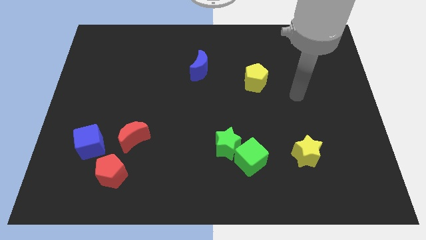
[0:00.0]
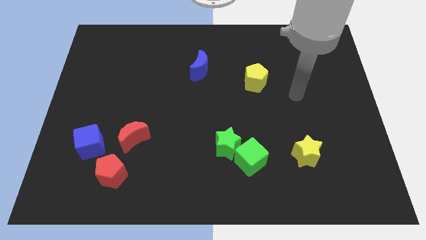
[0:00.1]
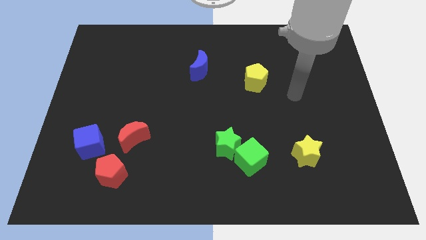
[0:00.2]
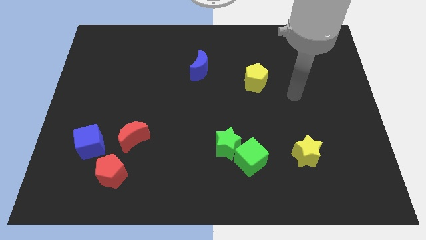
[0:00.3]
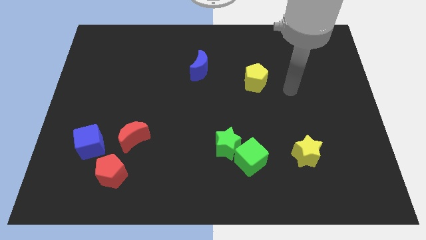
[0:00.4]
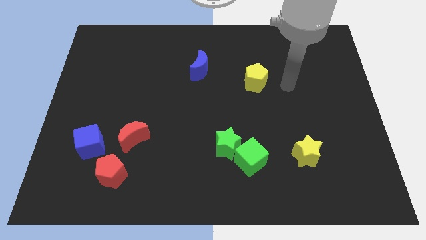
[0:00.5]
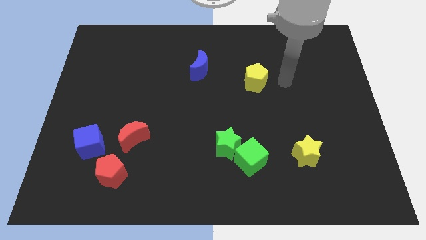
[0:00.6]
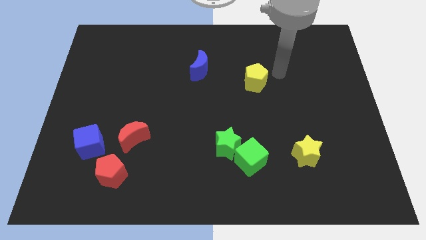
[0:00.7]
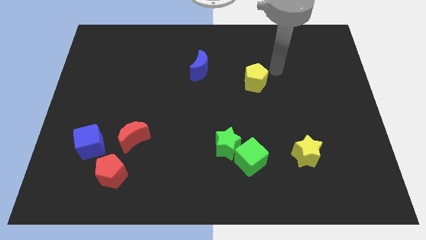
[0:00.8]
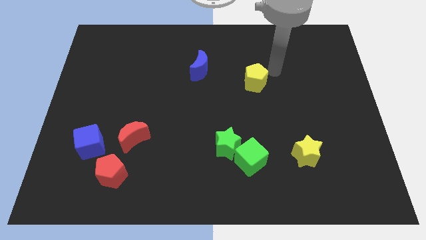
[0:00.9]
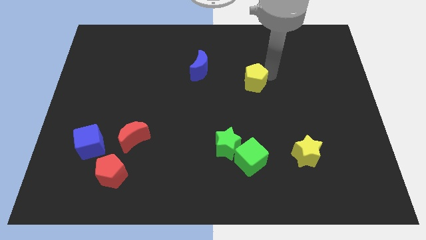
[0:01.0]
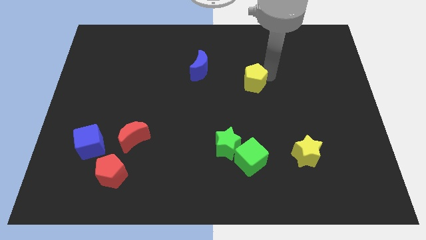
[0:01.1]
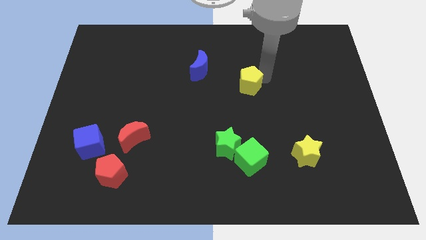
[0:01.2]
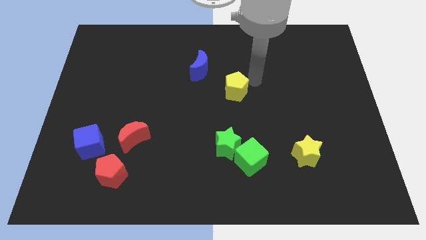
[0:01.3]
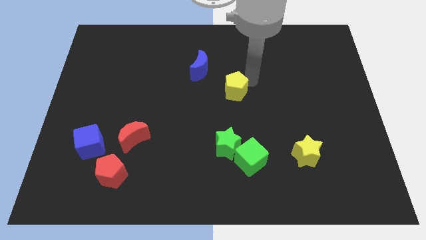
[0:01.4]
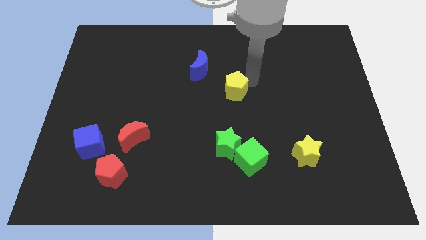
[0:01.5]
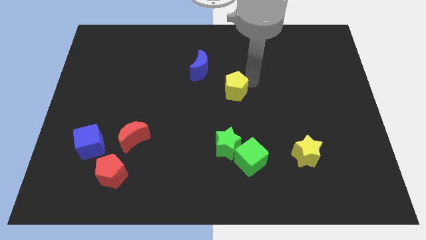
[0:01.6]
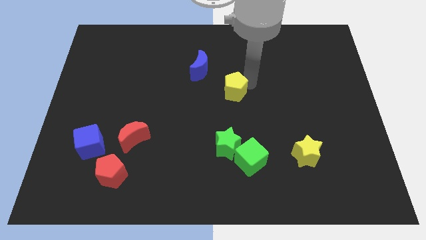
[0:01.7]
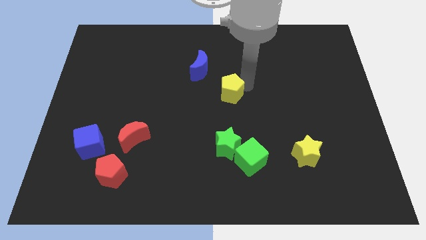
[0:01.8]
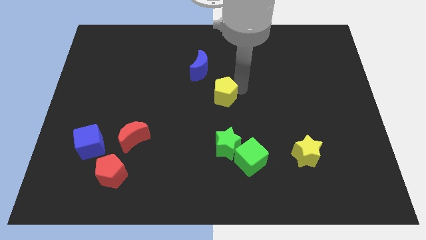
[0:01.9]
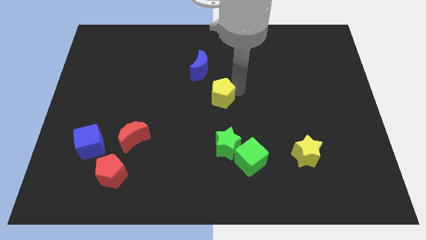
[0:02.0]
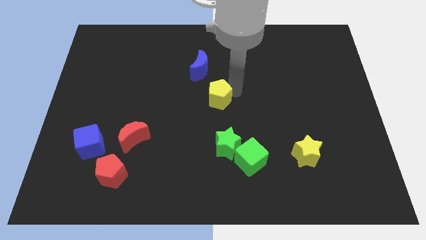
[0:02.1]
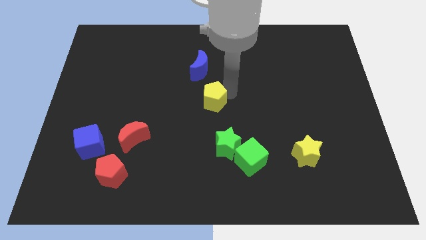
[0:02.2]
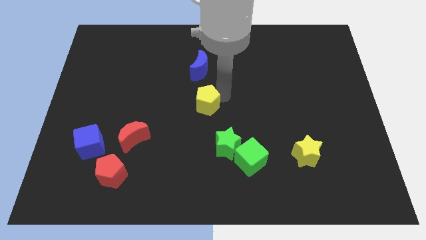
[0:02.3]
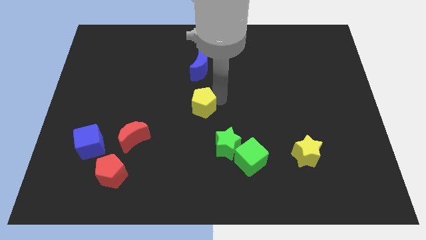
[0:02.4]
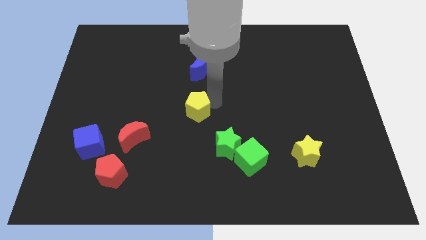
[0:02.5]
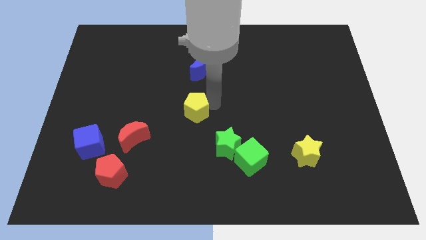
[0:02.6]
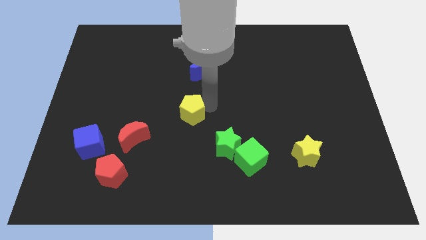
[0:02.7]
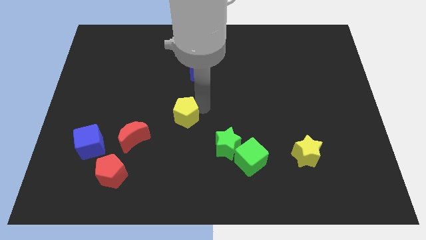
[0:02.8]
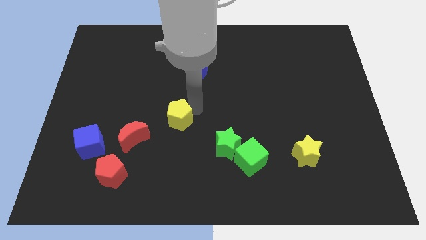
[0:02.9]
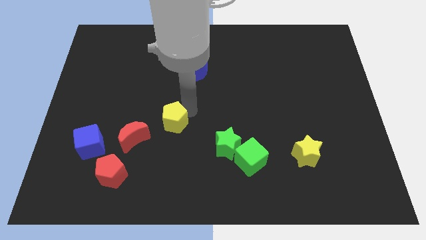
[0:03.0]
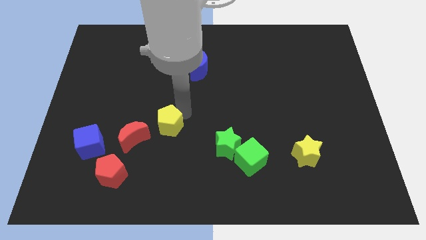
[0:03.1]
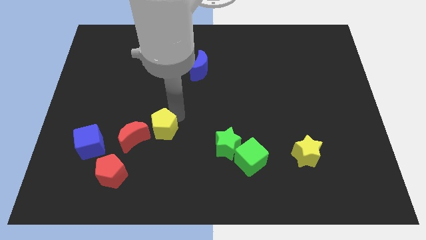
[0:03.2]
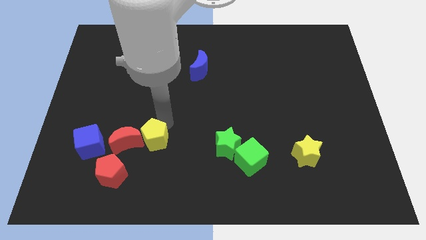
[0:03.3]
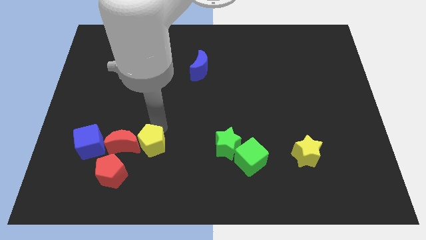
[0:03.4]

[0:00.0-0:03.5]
move yellow pentagon right to the red moon

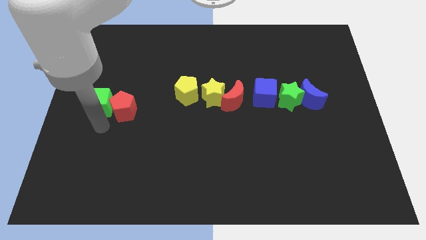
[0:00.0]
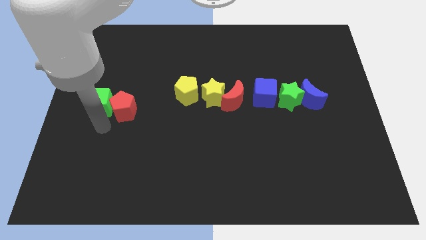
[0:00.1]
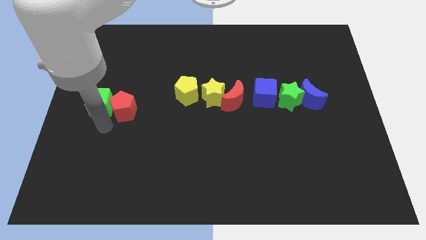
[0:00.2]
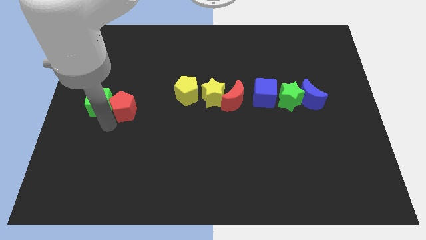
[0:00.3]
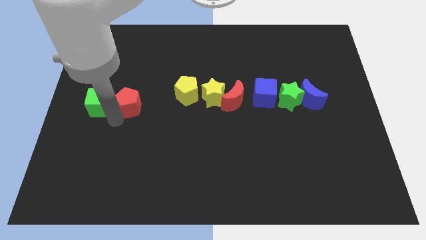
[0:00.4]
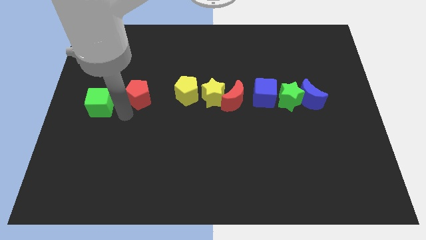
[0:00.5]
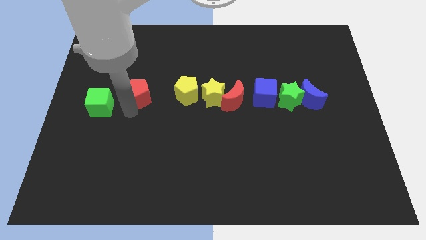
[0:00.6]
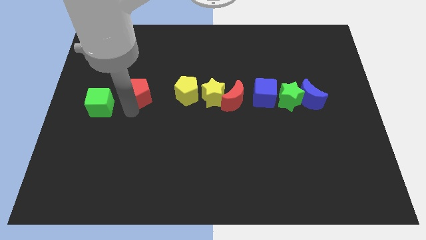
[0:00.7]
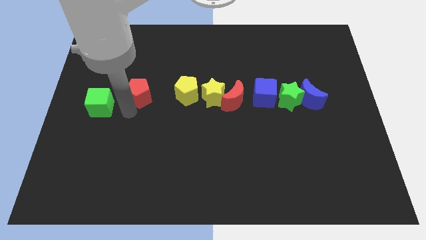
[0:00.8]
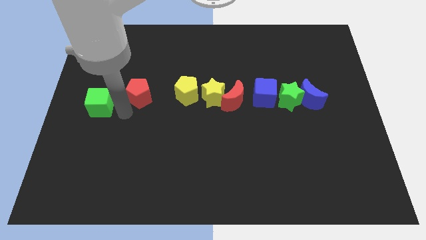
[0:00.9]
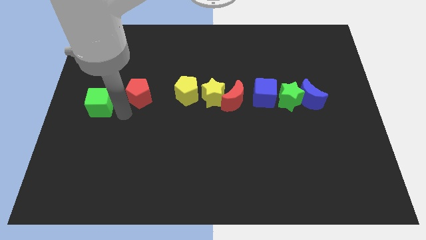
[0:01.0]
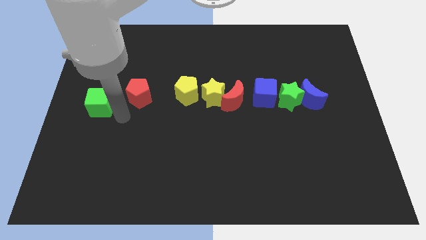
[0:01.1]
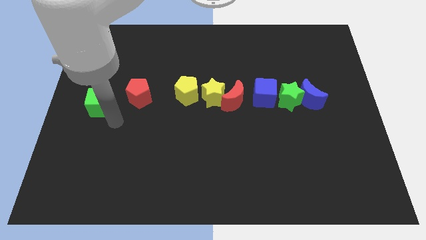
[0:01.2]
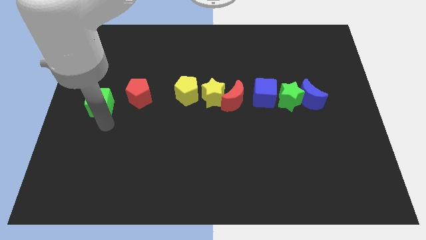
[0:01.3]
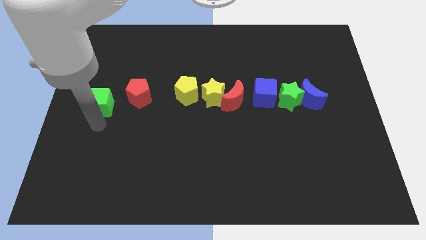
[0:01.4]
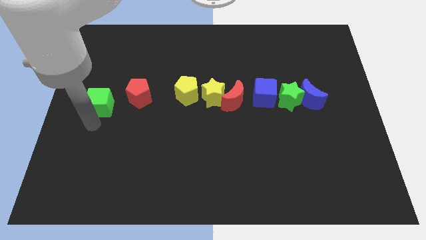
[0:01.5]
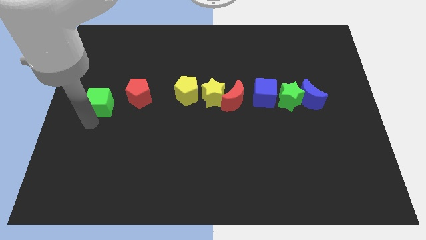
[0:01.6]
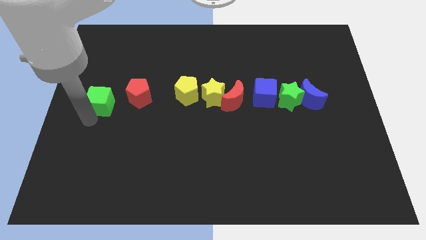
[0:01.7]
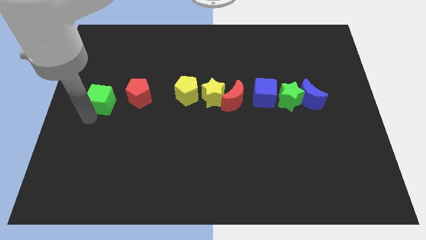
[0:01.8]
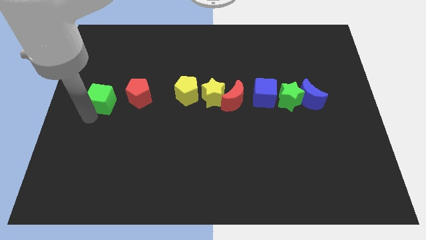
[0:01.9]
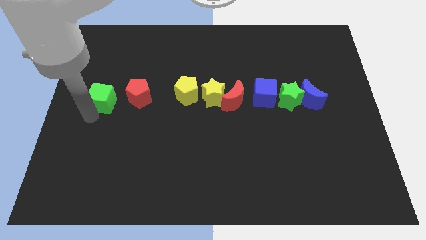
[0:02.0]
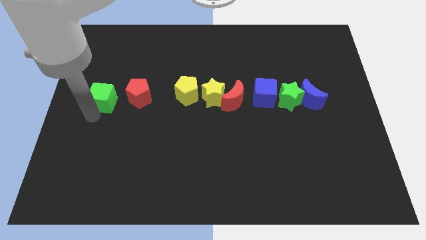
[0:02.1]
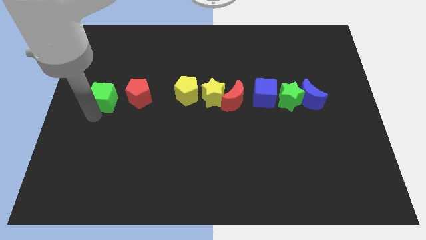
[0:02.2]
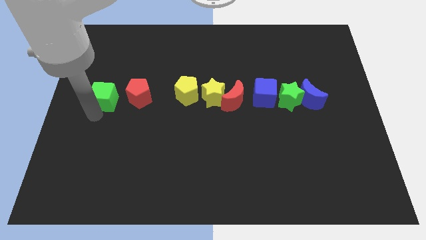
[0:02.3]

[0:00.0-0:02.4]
push the red pentagon and green cube towards the top side of the board

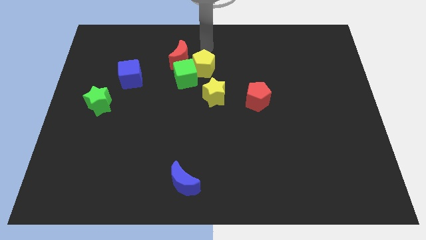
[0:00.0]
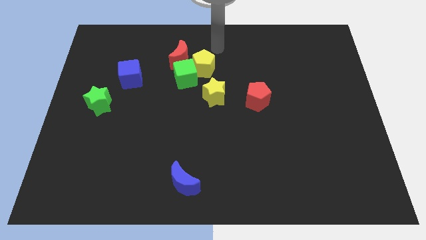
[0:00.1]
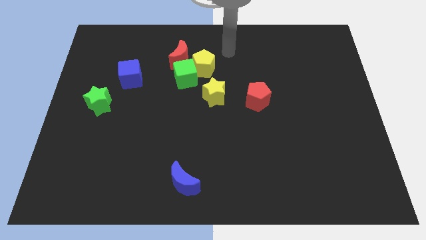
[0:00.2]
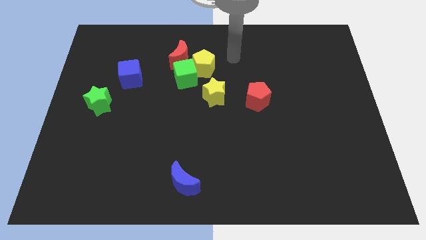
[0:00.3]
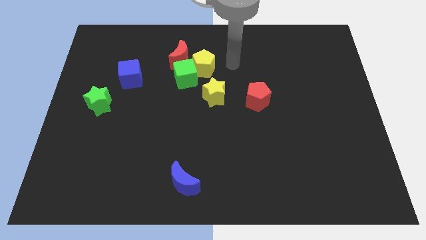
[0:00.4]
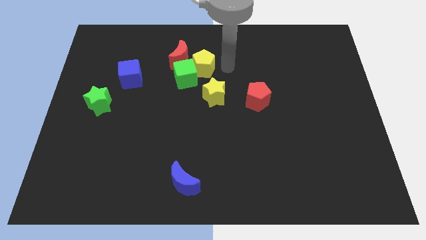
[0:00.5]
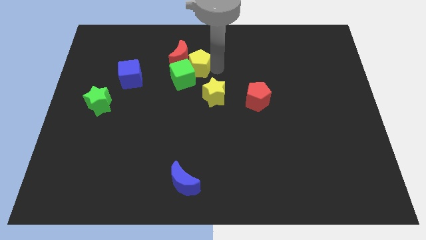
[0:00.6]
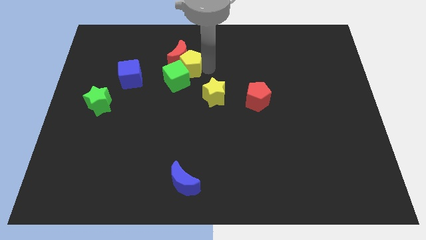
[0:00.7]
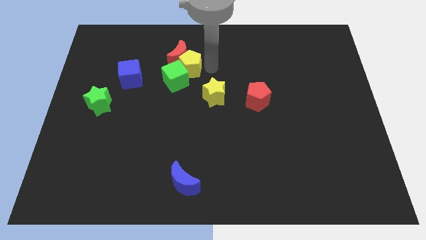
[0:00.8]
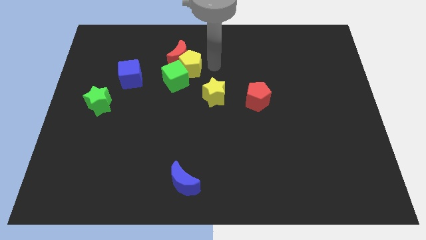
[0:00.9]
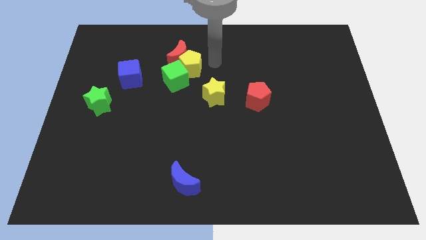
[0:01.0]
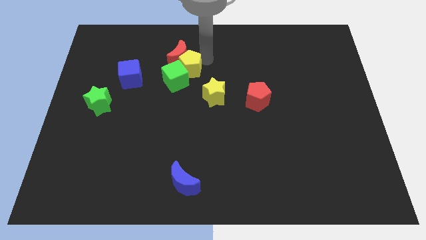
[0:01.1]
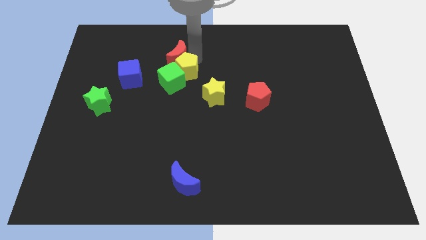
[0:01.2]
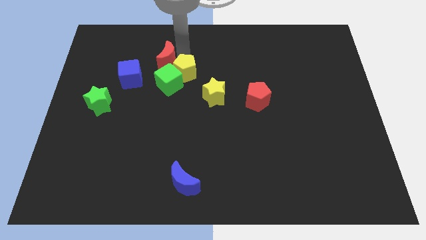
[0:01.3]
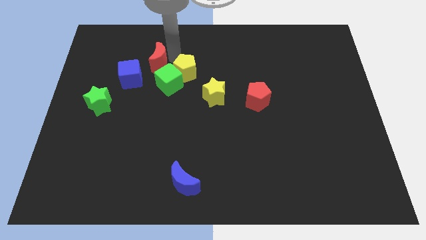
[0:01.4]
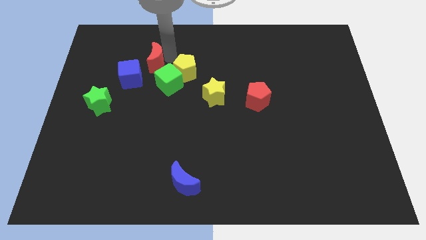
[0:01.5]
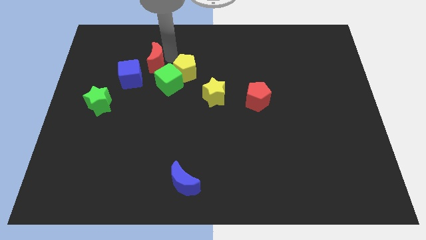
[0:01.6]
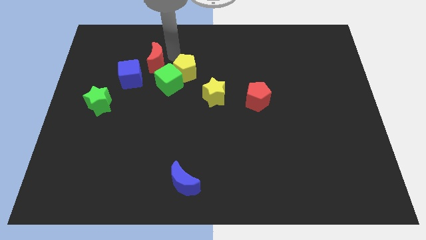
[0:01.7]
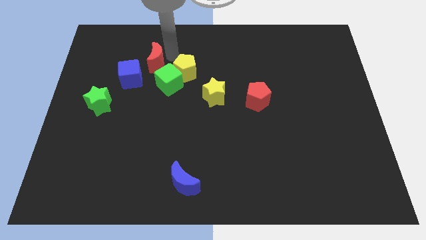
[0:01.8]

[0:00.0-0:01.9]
push the red moon close to the blue cube

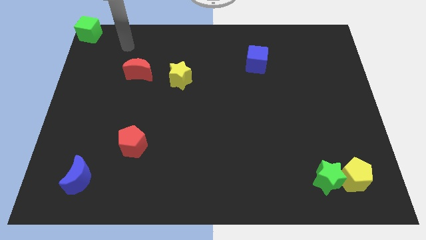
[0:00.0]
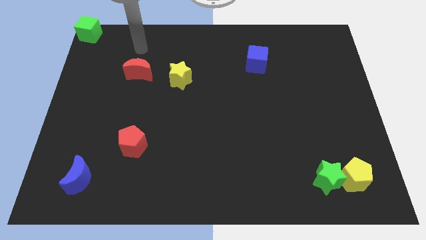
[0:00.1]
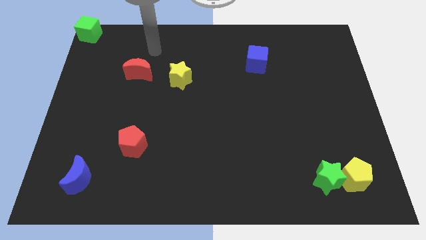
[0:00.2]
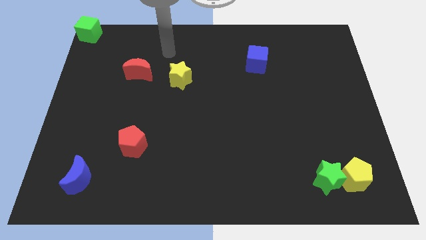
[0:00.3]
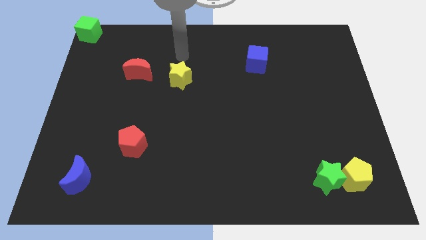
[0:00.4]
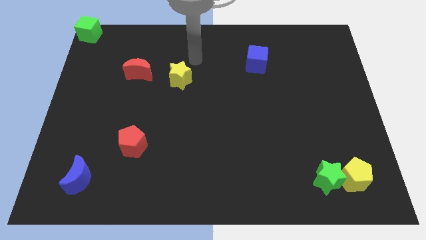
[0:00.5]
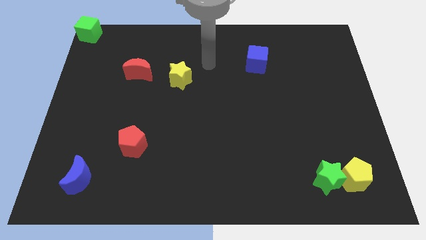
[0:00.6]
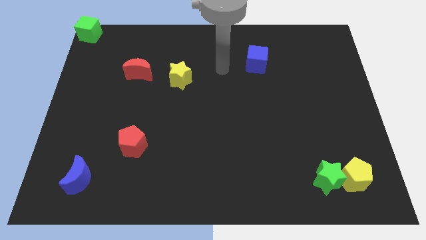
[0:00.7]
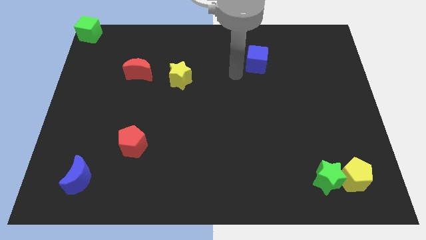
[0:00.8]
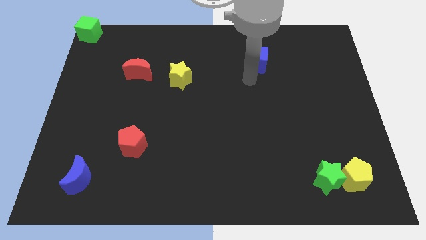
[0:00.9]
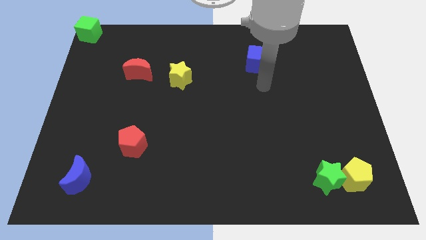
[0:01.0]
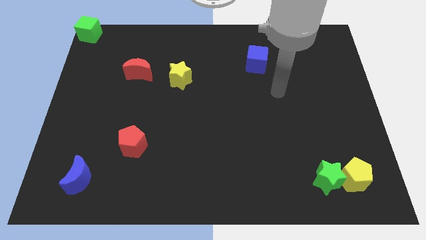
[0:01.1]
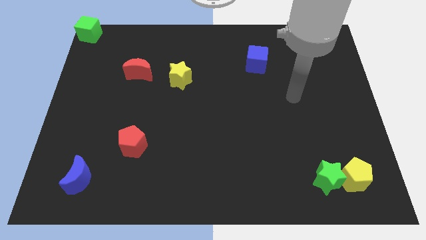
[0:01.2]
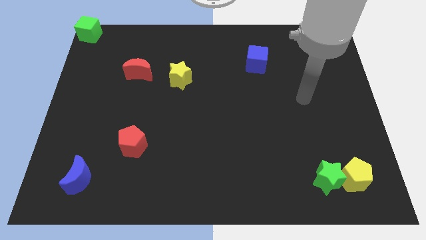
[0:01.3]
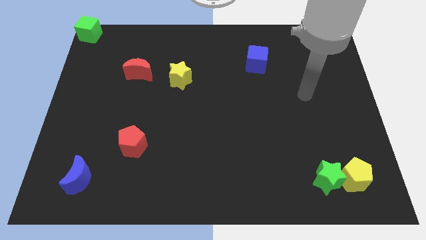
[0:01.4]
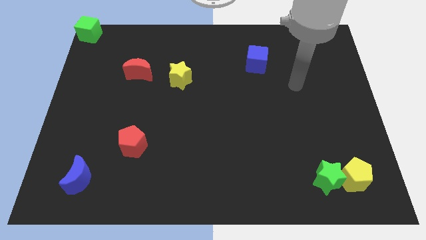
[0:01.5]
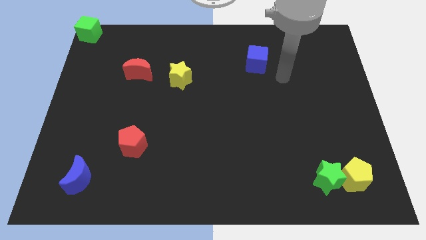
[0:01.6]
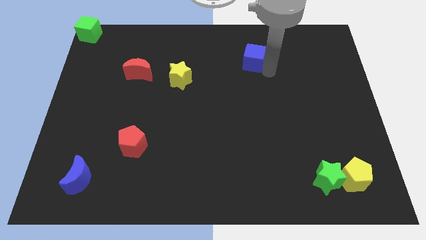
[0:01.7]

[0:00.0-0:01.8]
touch the blue cube with your arm
